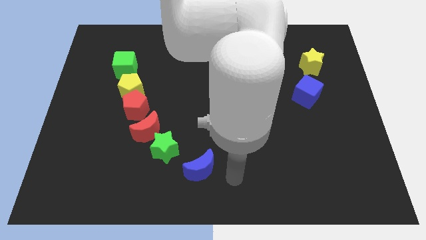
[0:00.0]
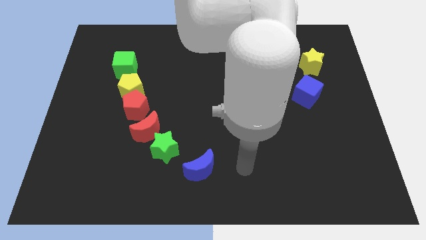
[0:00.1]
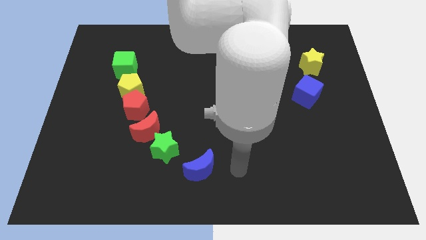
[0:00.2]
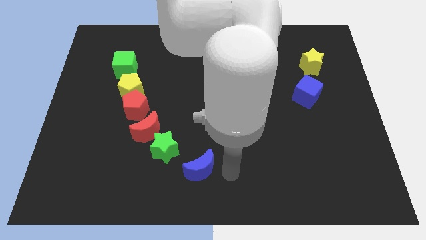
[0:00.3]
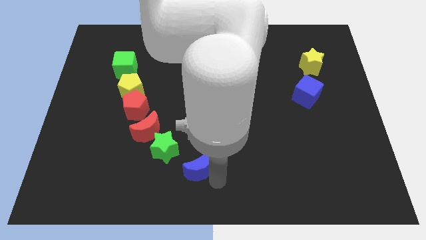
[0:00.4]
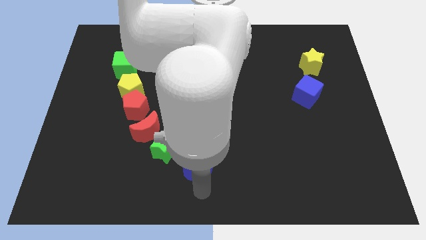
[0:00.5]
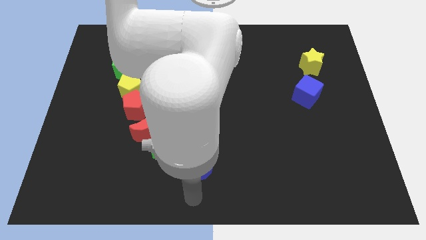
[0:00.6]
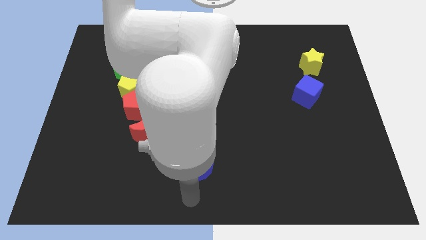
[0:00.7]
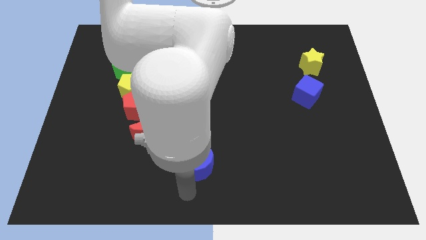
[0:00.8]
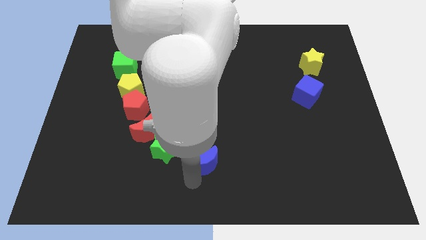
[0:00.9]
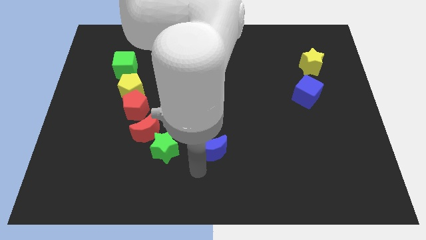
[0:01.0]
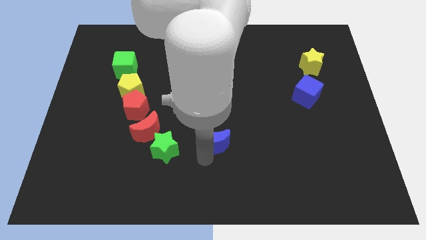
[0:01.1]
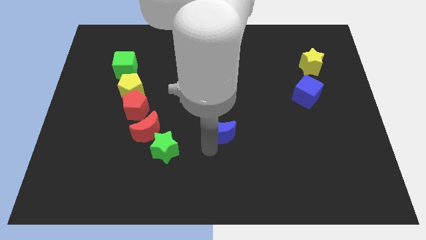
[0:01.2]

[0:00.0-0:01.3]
push blue crescent beside green star

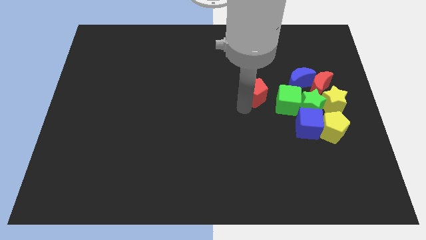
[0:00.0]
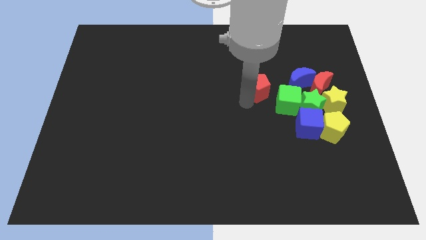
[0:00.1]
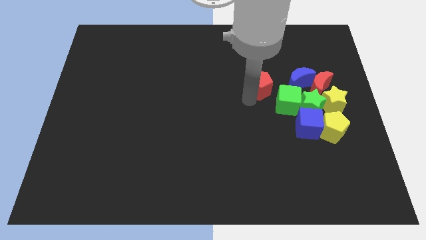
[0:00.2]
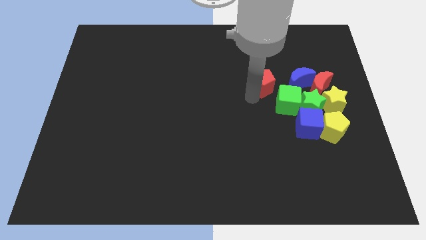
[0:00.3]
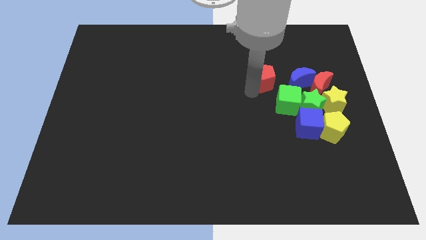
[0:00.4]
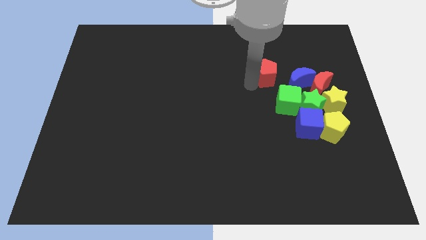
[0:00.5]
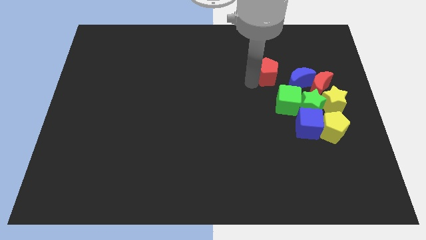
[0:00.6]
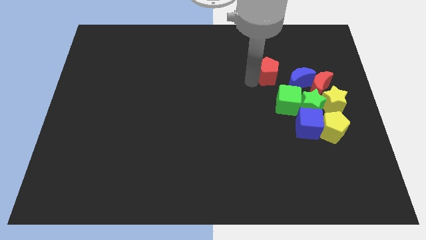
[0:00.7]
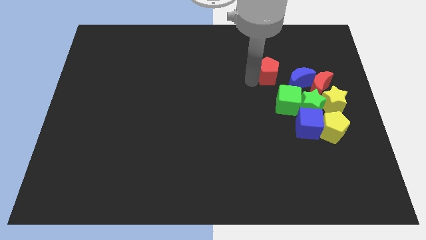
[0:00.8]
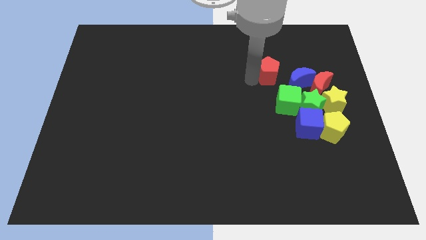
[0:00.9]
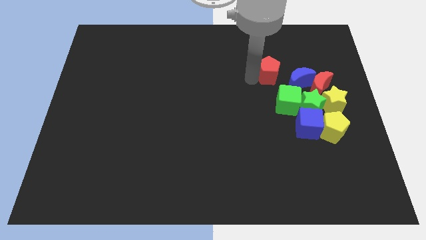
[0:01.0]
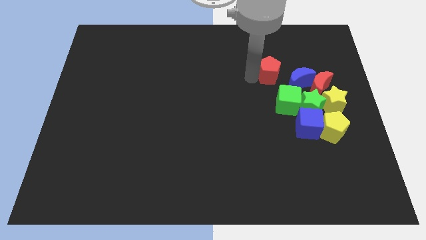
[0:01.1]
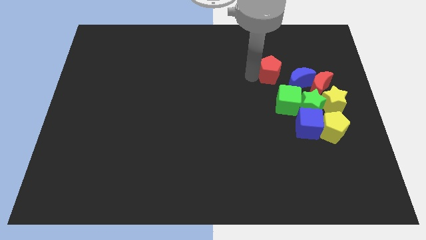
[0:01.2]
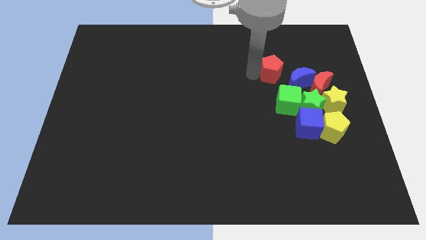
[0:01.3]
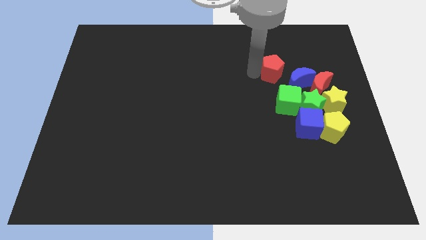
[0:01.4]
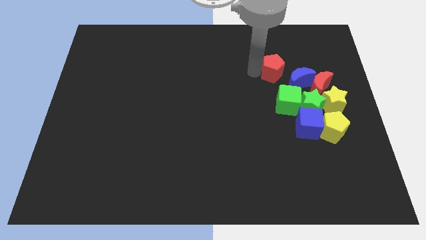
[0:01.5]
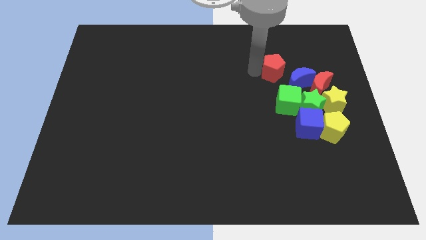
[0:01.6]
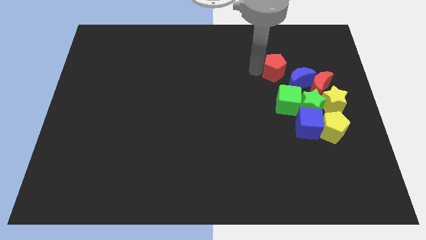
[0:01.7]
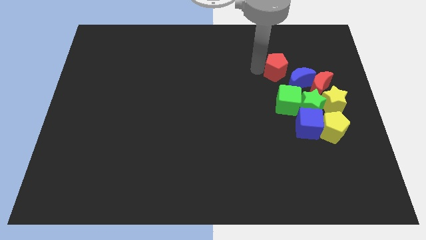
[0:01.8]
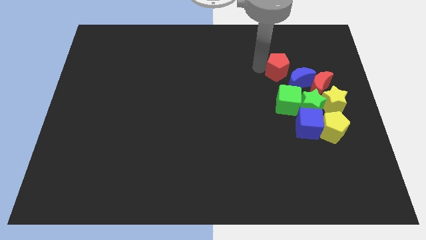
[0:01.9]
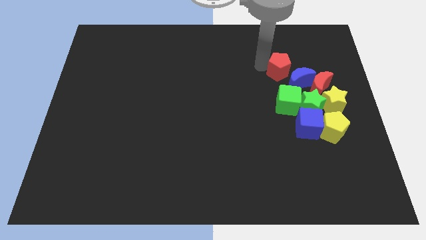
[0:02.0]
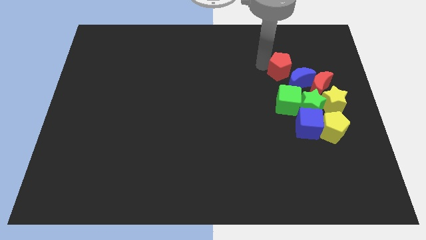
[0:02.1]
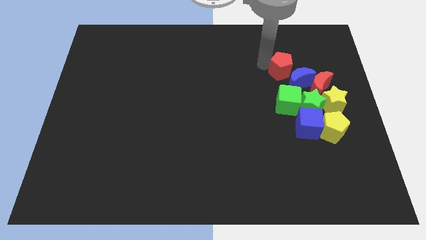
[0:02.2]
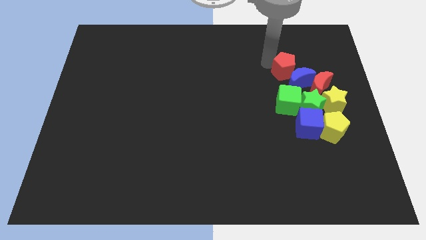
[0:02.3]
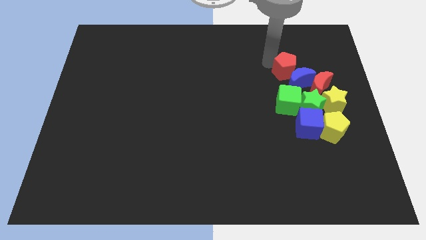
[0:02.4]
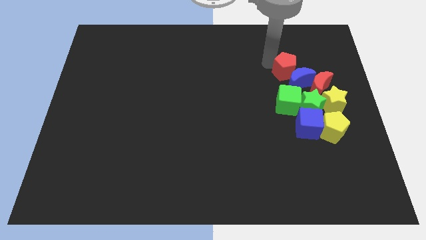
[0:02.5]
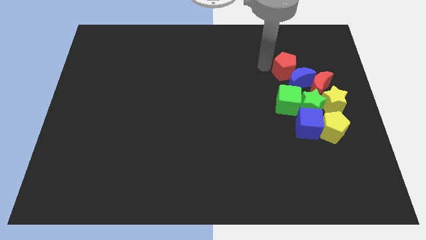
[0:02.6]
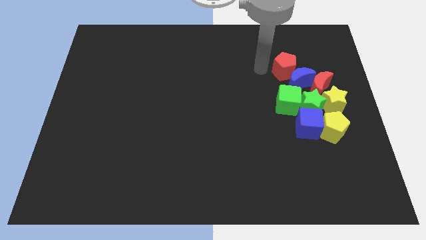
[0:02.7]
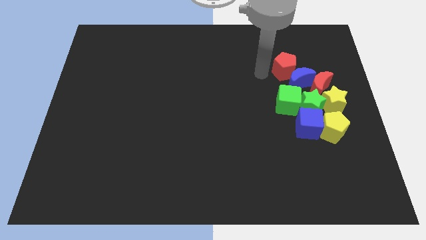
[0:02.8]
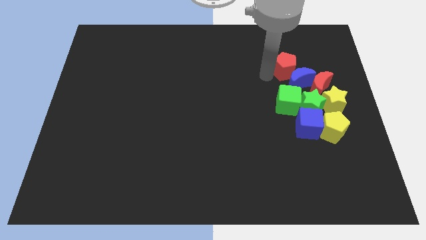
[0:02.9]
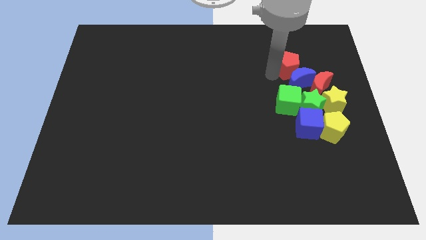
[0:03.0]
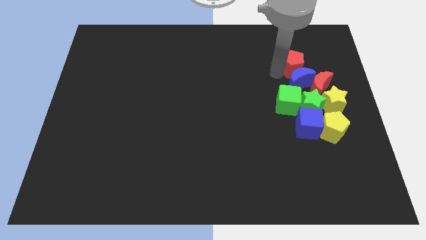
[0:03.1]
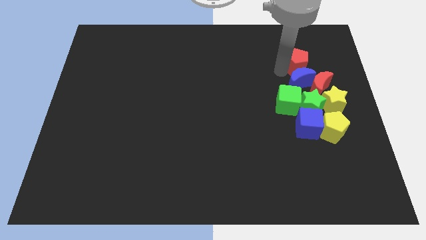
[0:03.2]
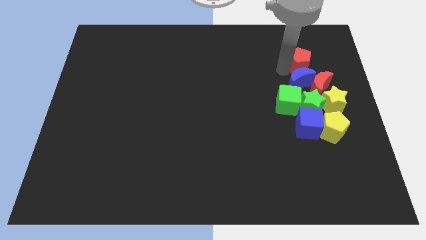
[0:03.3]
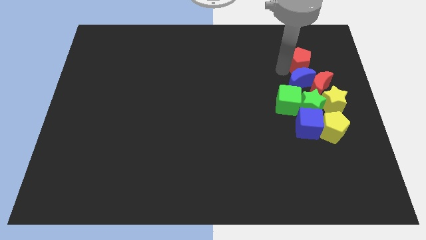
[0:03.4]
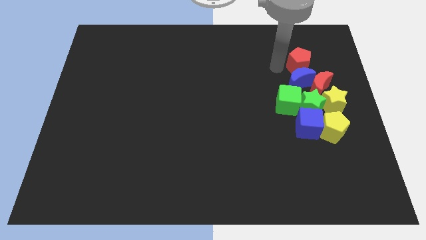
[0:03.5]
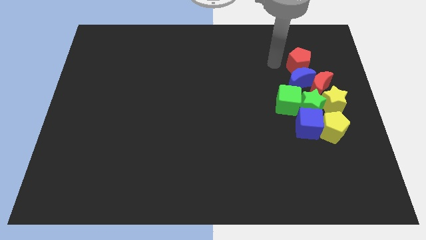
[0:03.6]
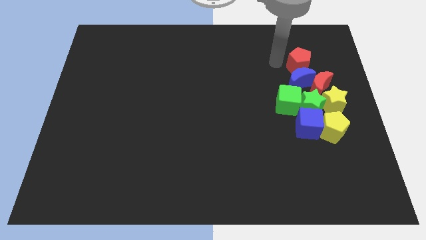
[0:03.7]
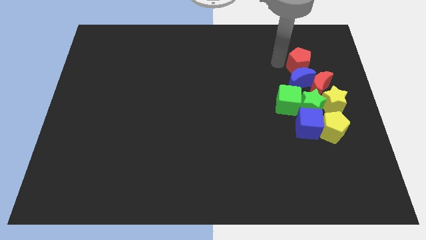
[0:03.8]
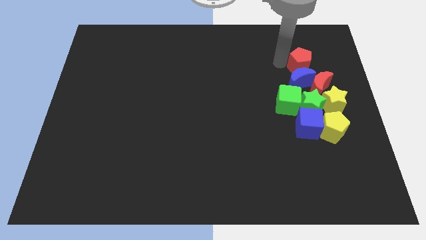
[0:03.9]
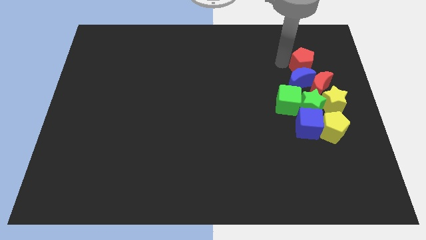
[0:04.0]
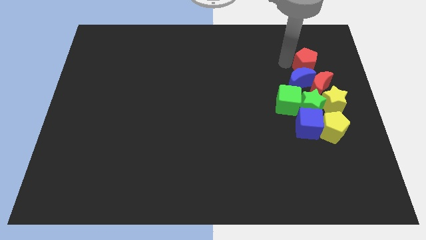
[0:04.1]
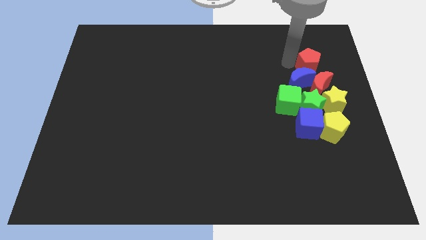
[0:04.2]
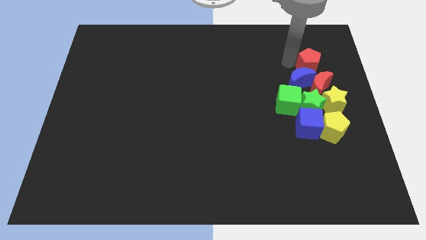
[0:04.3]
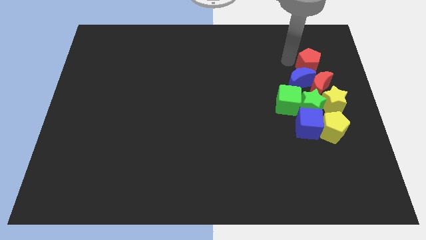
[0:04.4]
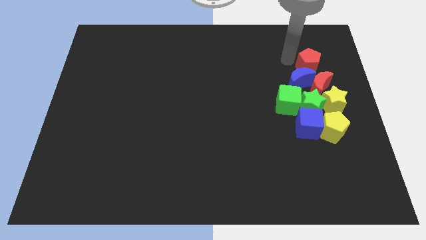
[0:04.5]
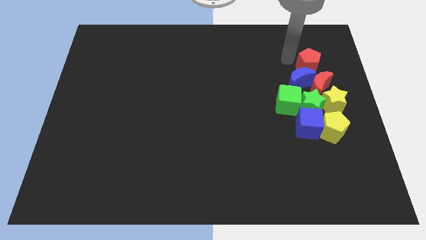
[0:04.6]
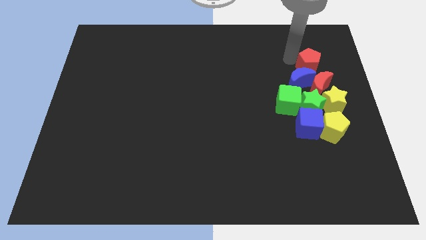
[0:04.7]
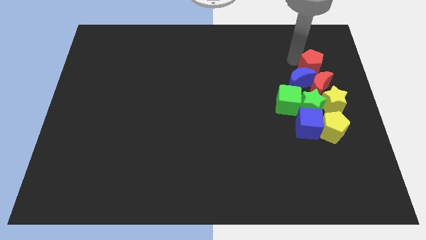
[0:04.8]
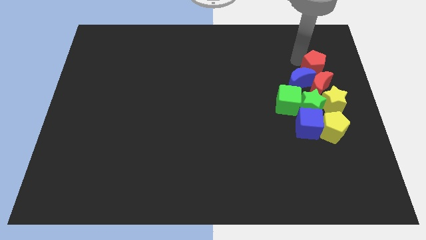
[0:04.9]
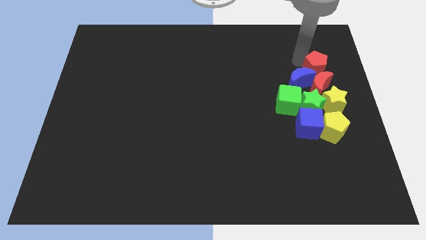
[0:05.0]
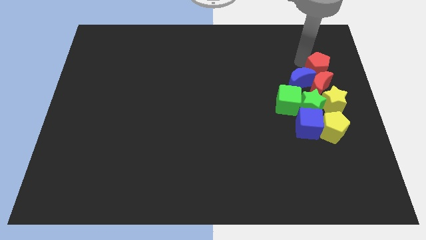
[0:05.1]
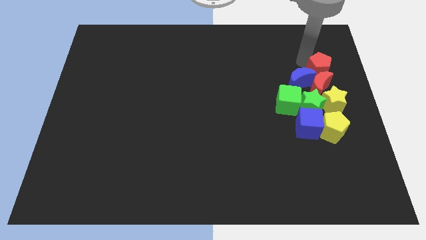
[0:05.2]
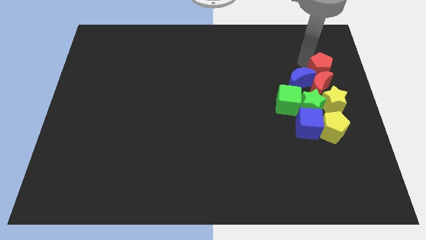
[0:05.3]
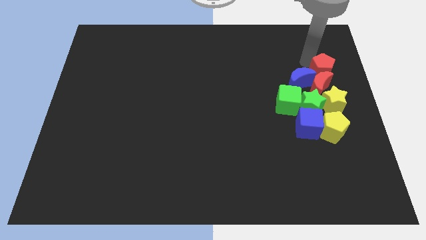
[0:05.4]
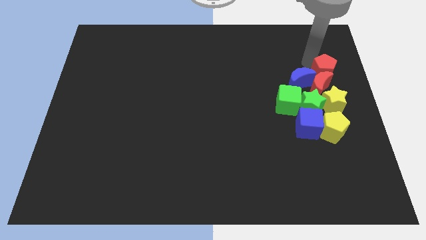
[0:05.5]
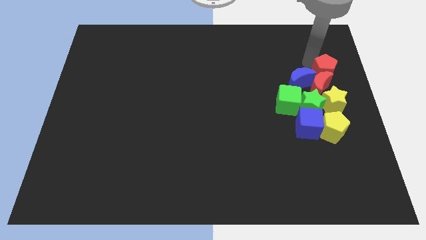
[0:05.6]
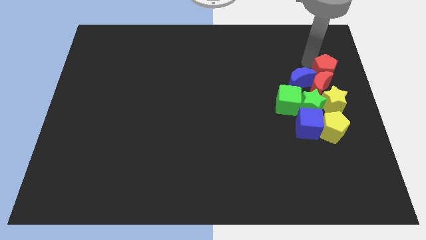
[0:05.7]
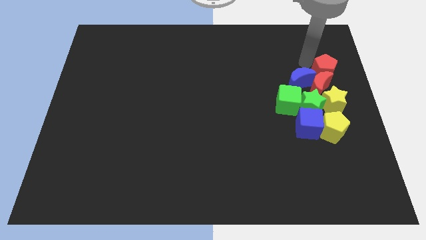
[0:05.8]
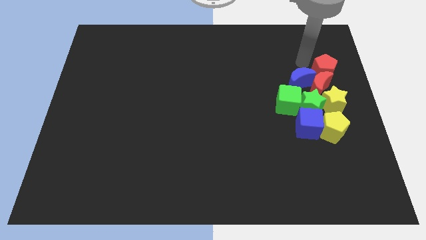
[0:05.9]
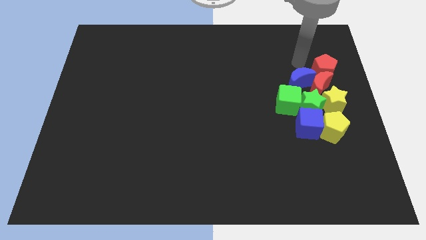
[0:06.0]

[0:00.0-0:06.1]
place the red pentagon above the red moon

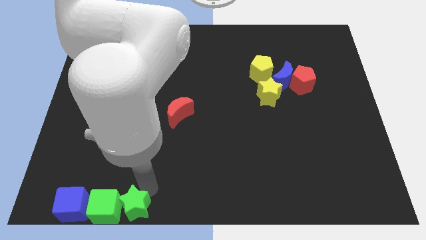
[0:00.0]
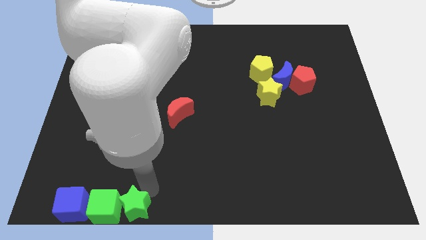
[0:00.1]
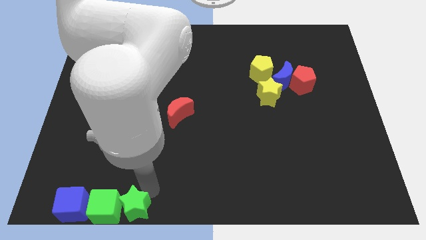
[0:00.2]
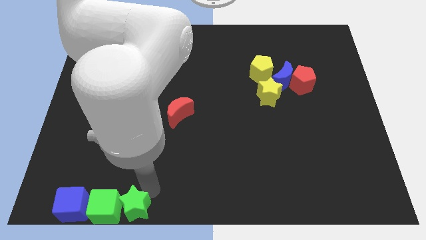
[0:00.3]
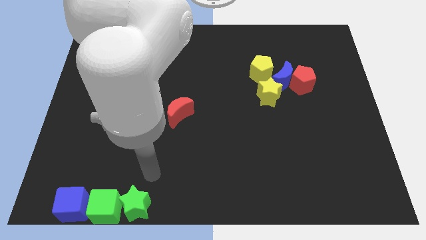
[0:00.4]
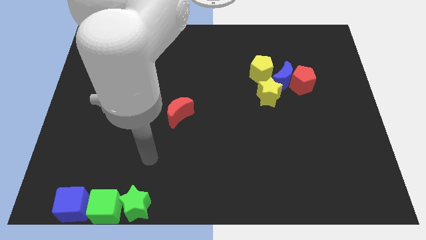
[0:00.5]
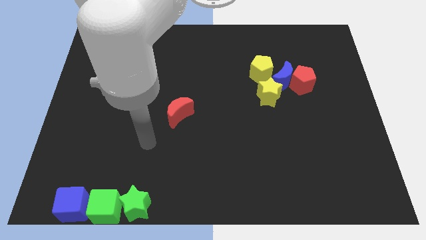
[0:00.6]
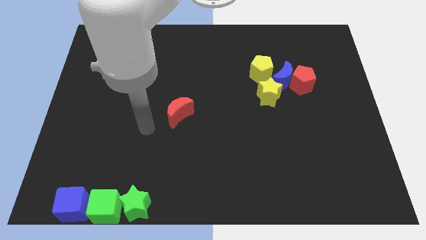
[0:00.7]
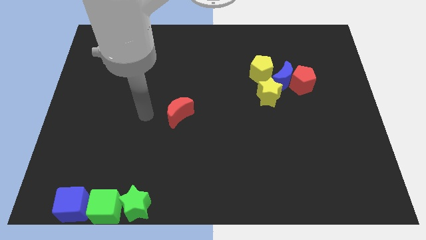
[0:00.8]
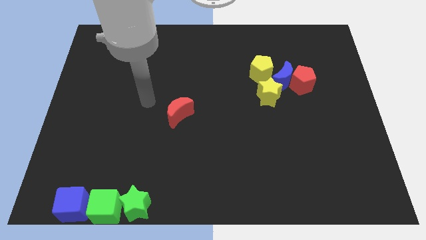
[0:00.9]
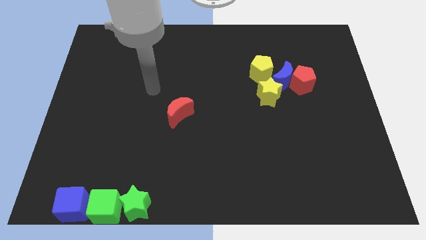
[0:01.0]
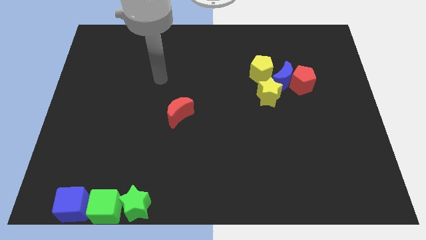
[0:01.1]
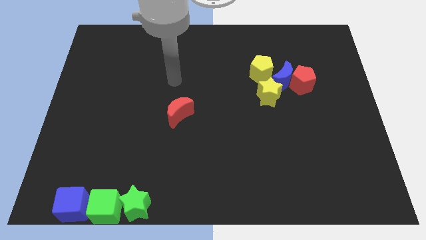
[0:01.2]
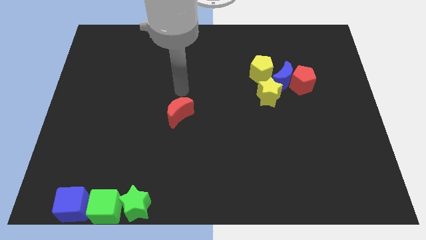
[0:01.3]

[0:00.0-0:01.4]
go away from the green star
